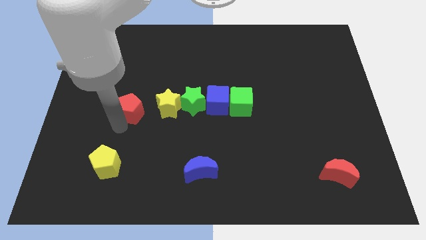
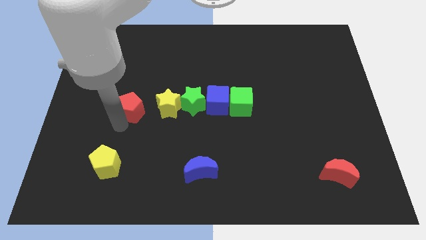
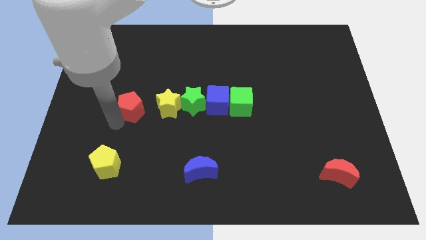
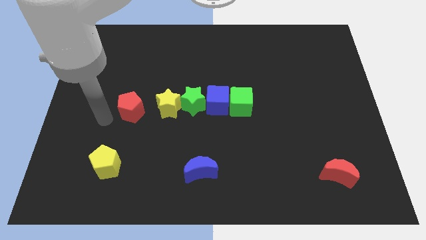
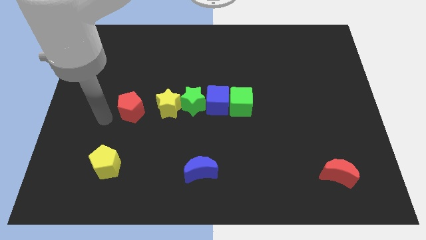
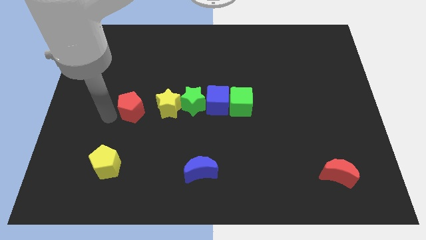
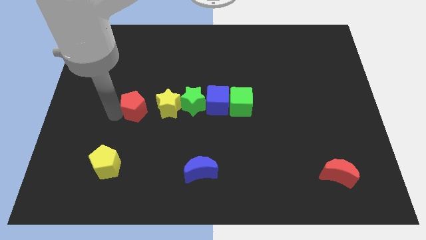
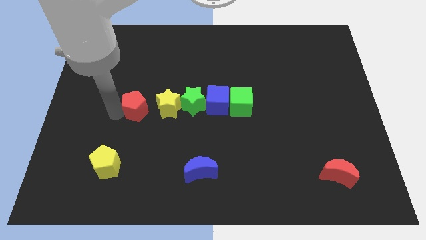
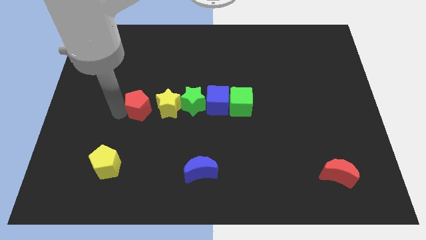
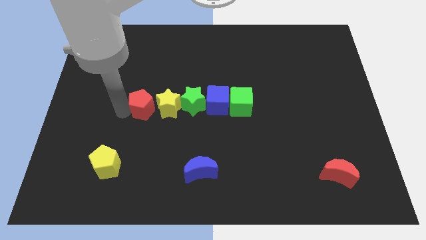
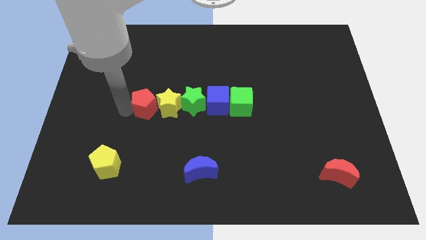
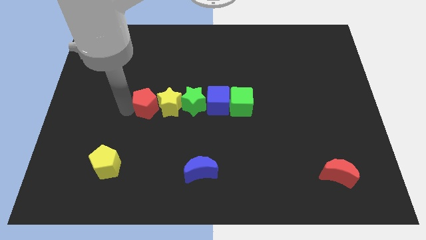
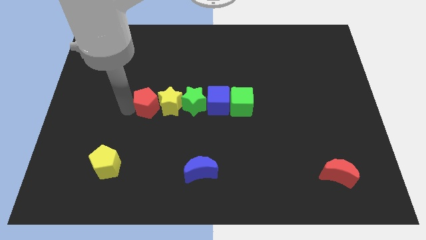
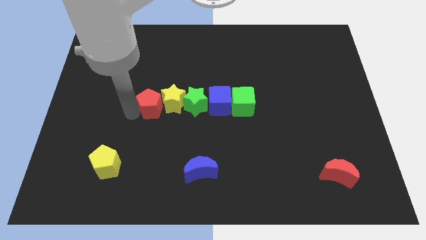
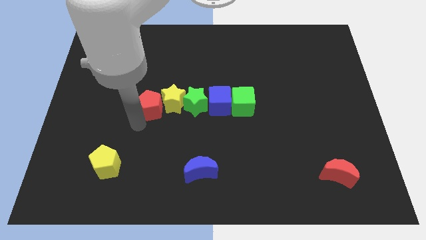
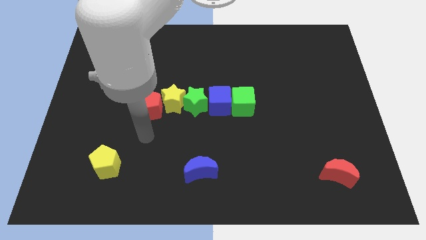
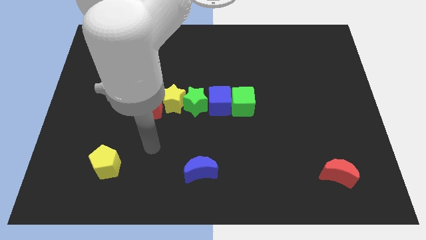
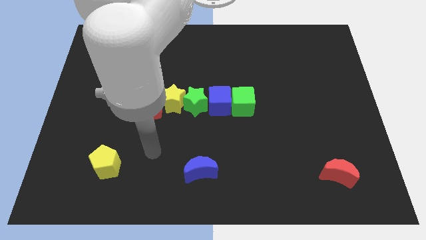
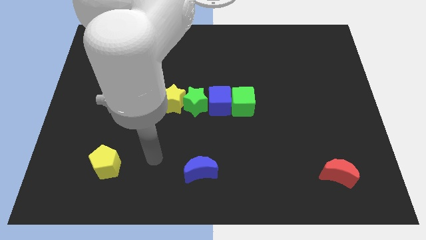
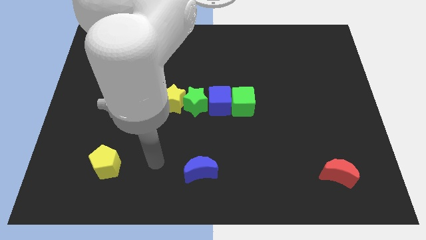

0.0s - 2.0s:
place the red pentagon close to the yellow star

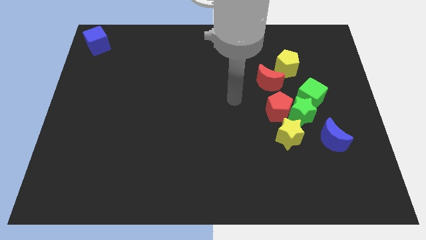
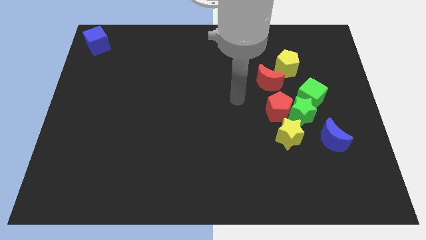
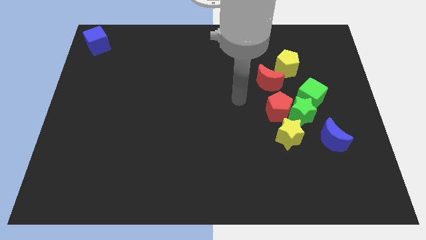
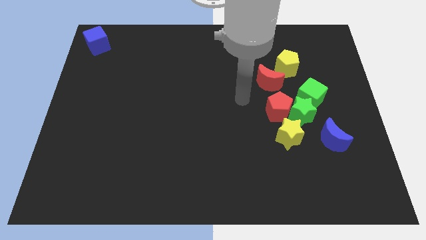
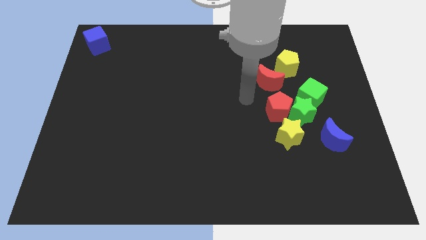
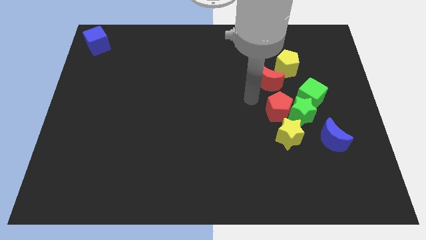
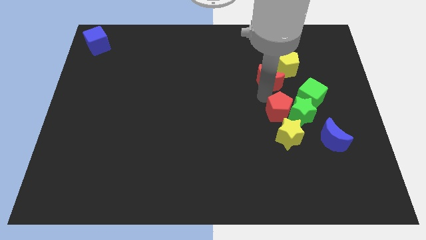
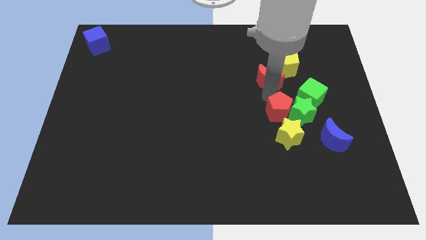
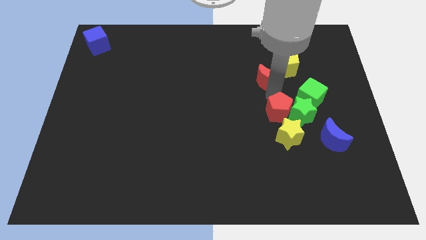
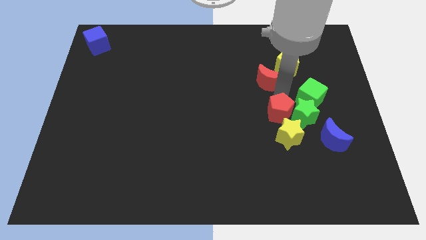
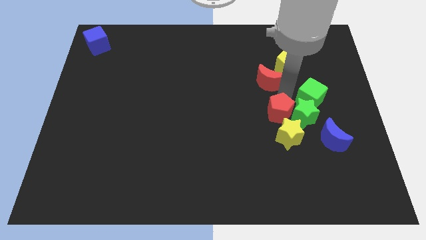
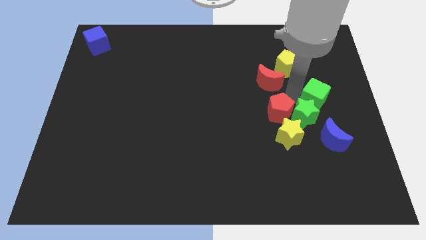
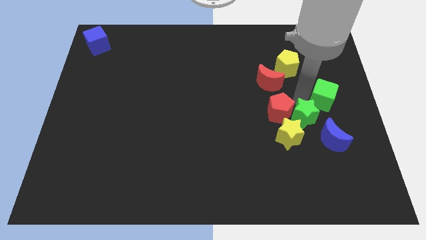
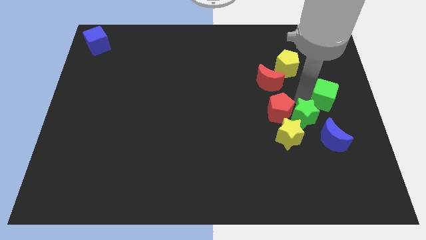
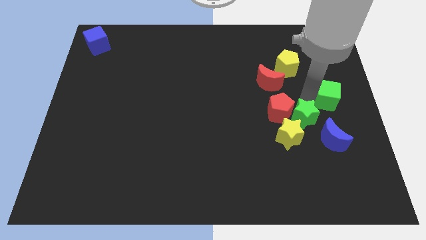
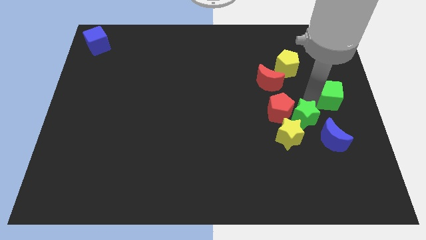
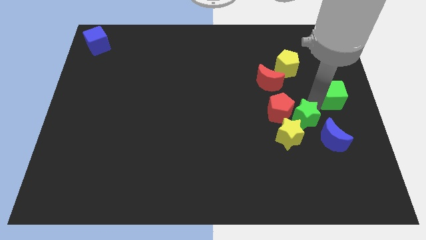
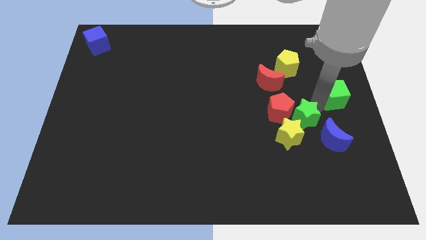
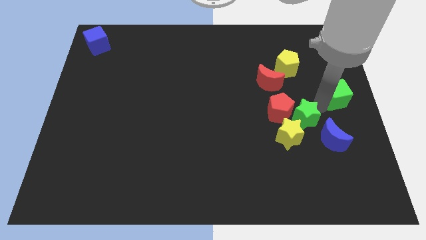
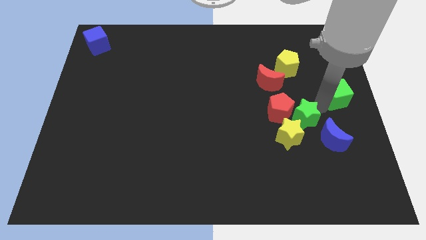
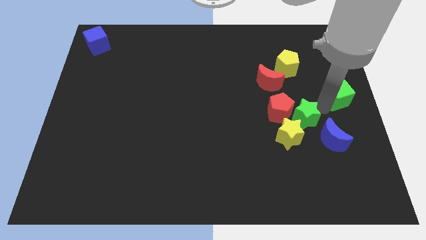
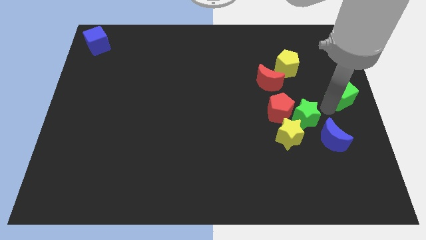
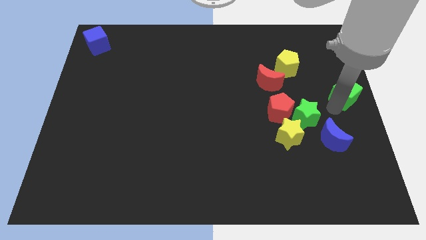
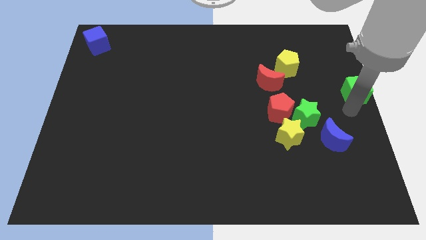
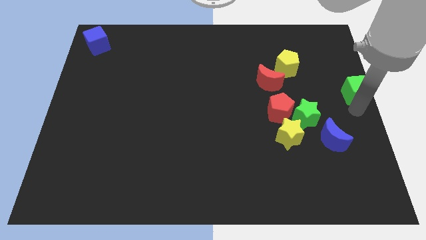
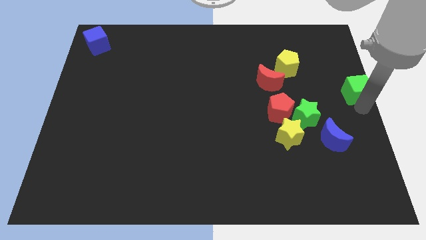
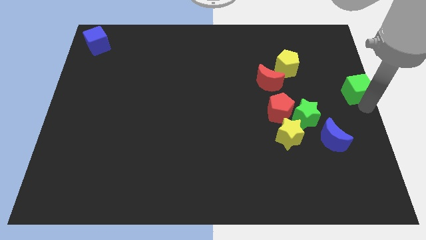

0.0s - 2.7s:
go and separate the green cube from the green star

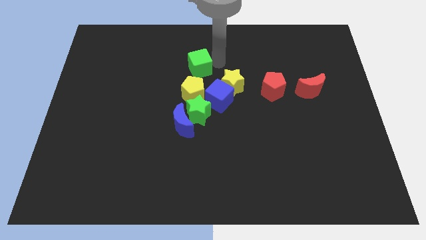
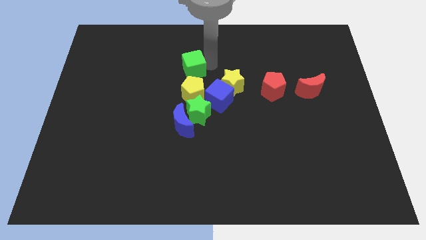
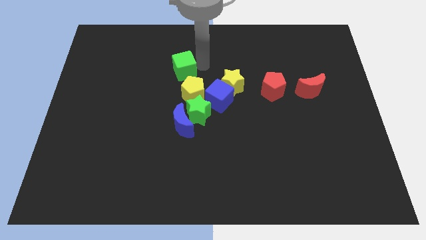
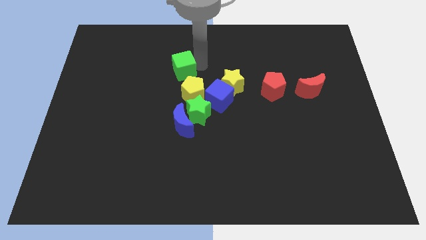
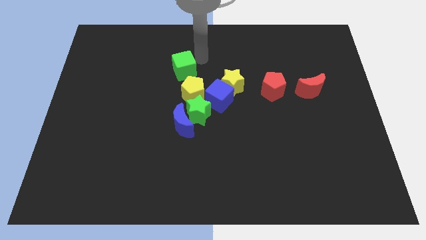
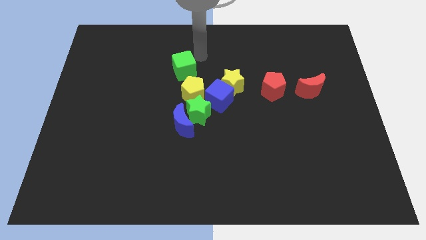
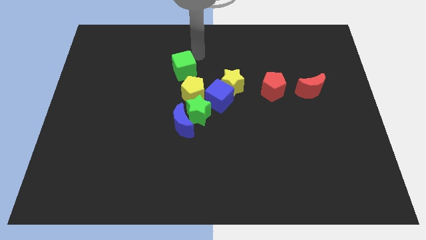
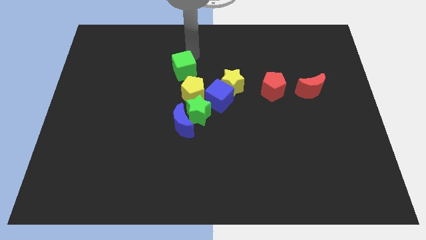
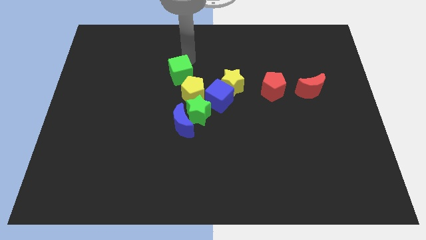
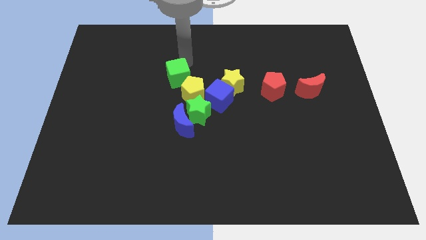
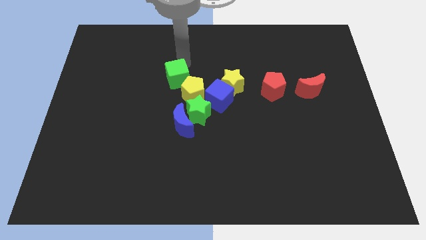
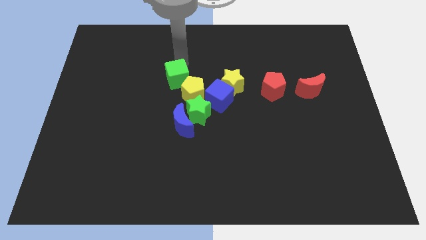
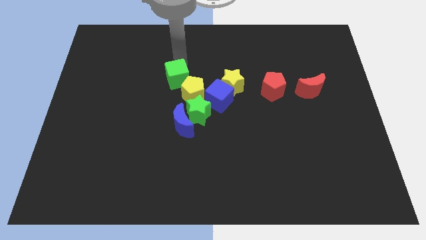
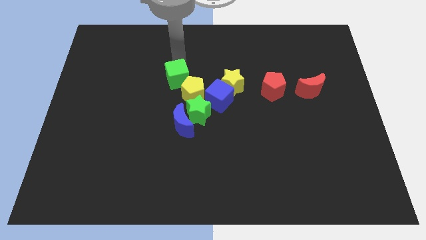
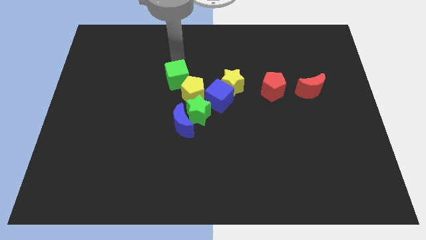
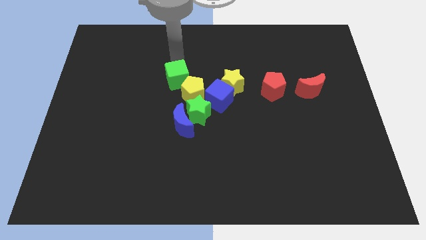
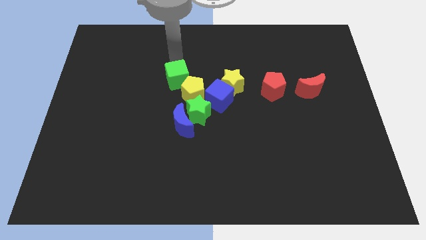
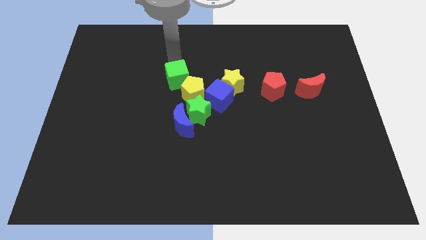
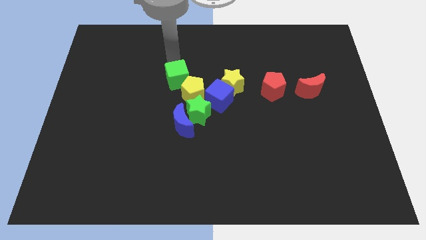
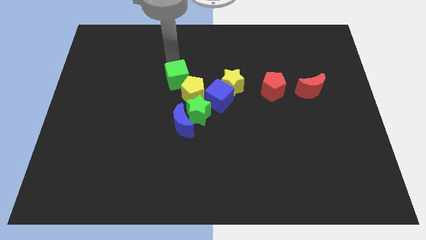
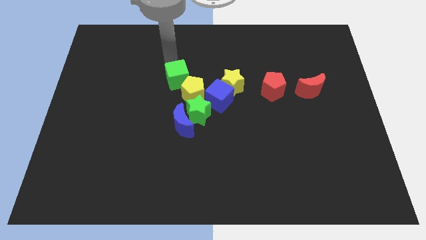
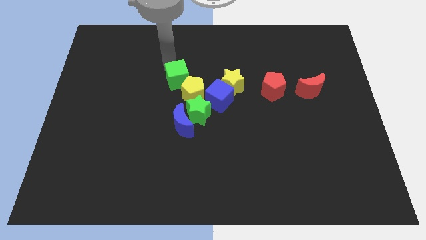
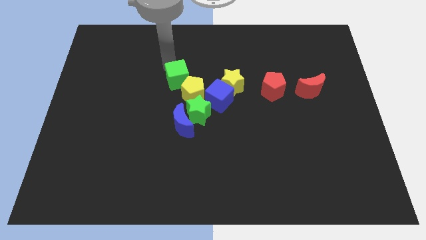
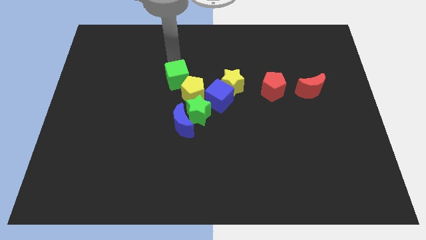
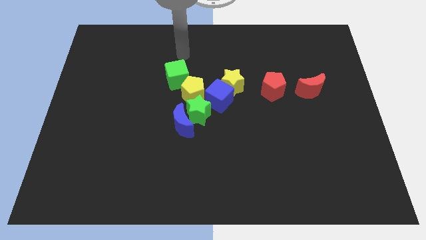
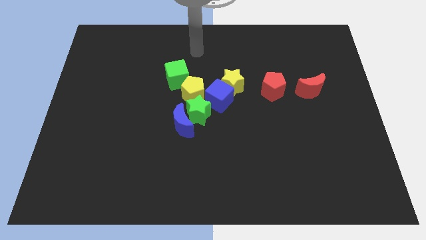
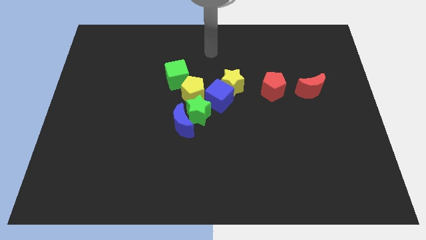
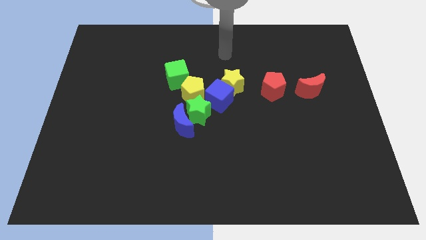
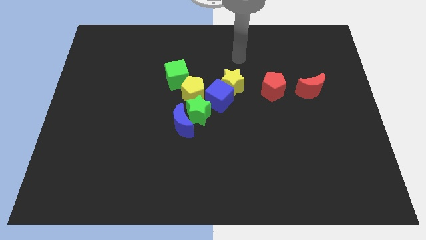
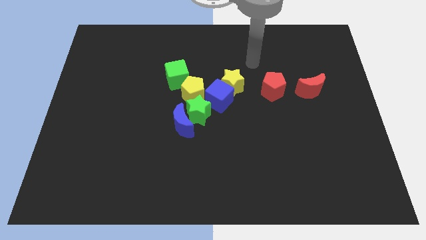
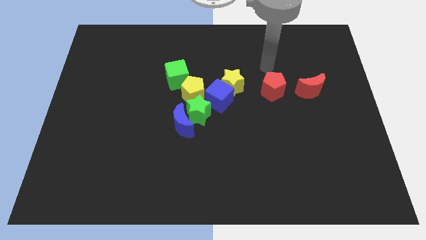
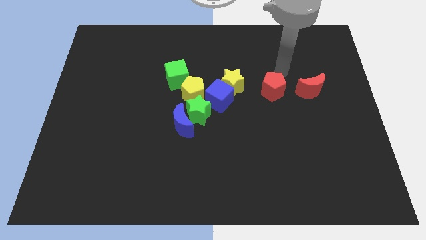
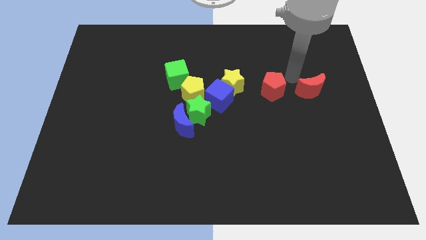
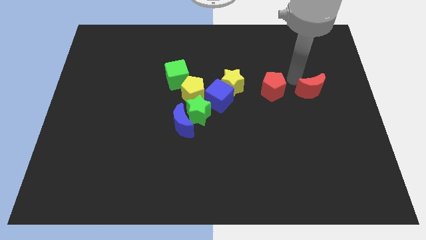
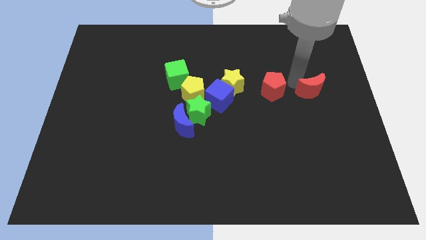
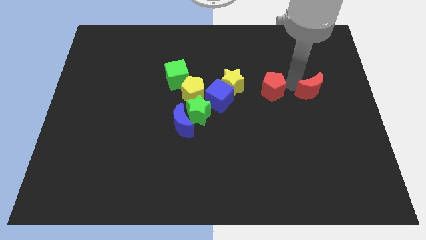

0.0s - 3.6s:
move the arm away from the green cube

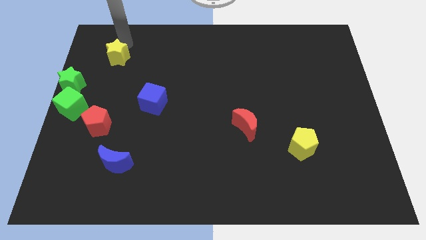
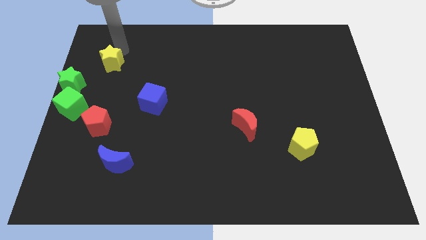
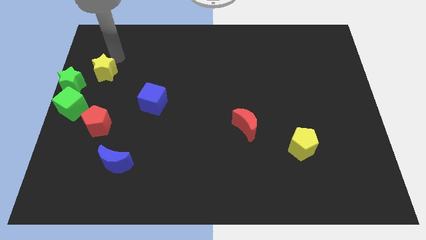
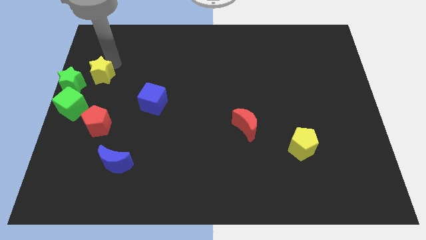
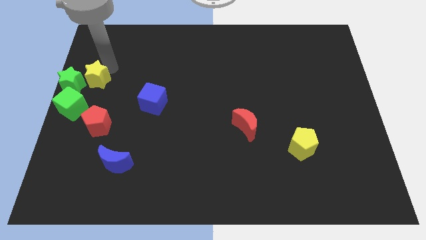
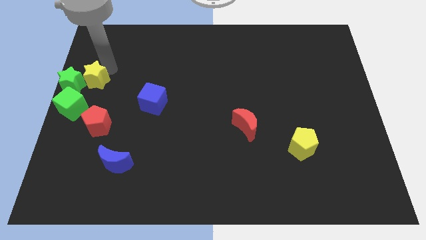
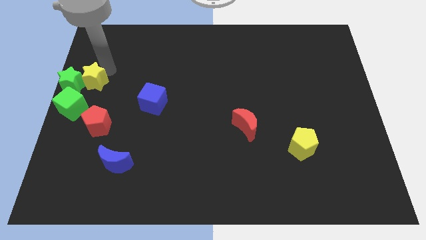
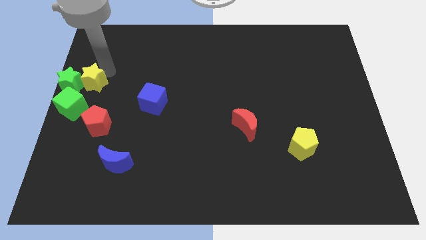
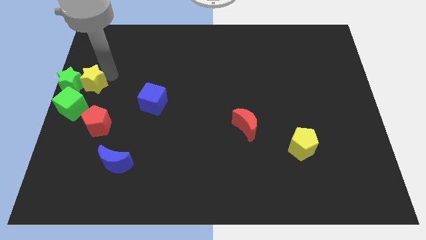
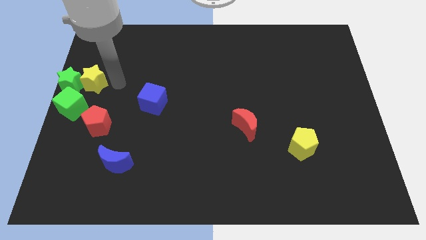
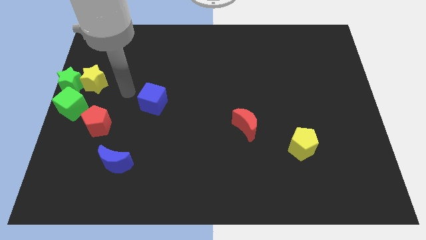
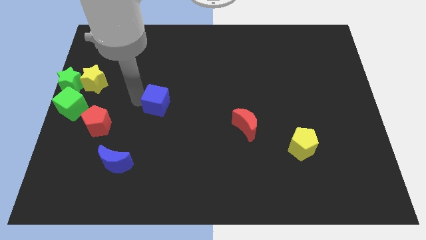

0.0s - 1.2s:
push the yellow star into the green star
